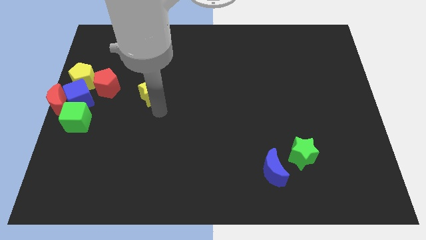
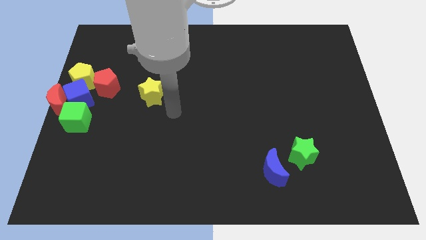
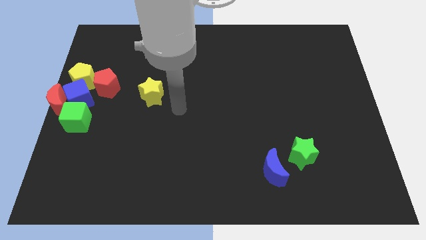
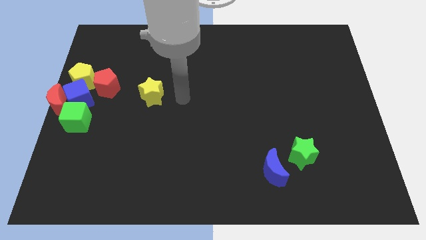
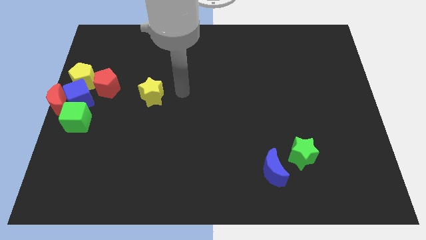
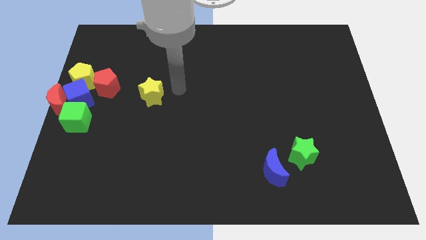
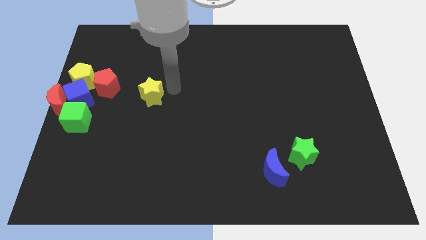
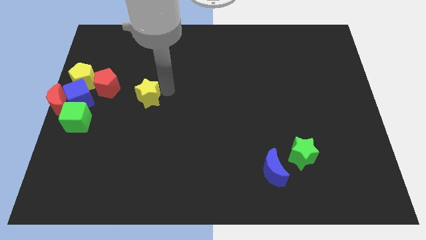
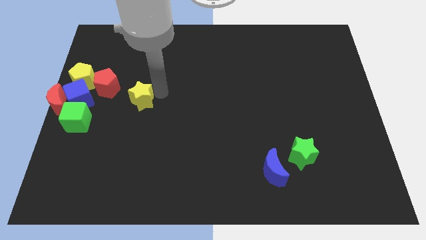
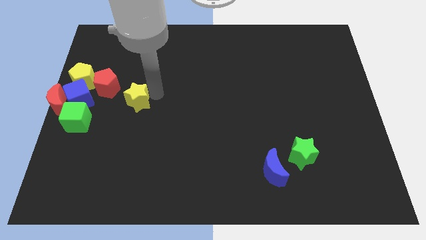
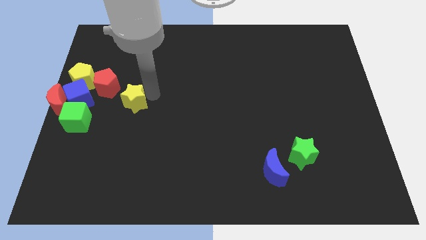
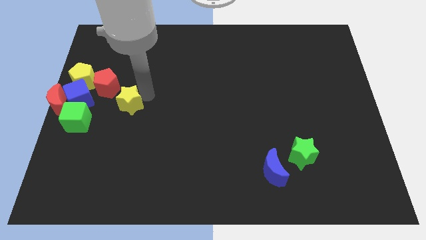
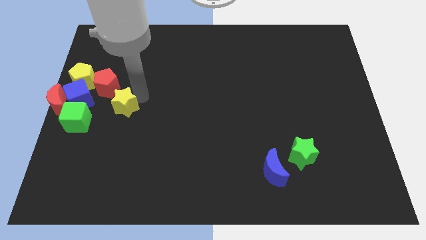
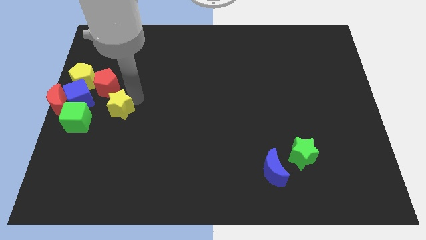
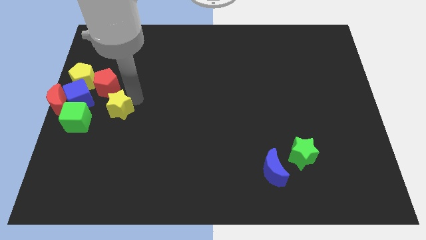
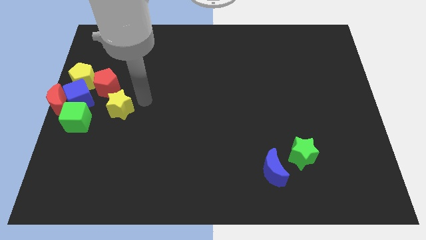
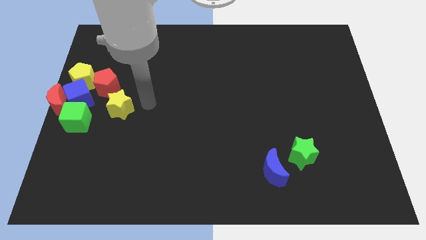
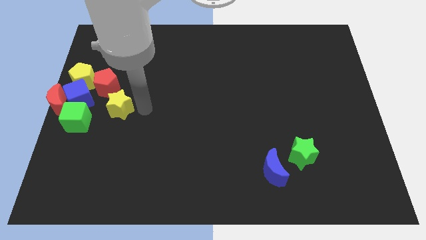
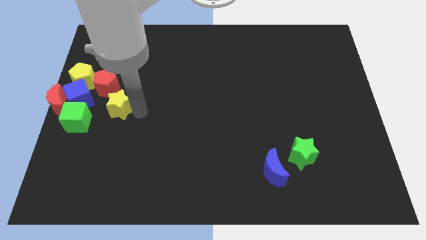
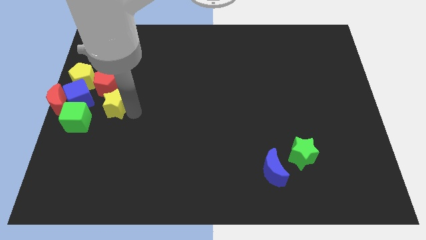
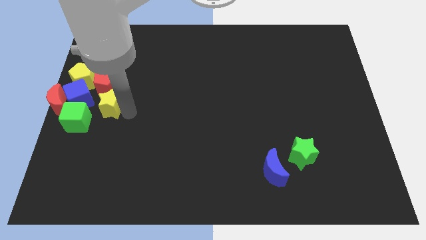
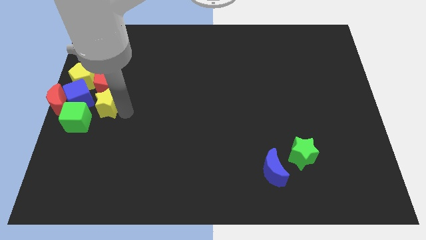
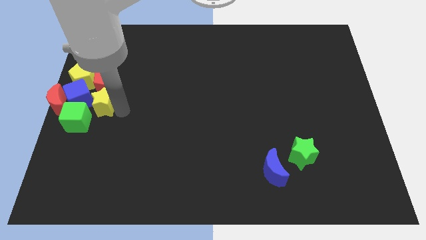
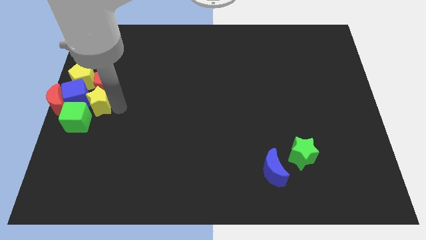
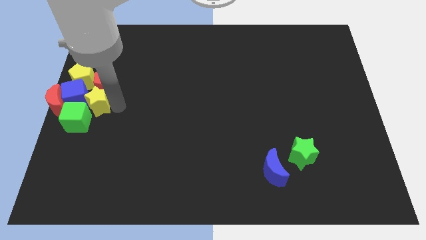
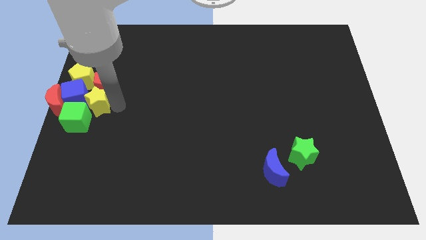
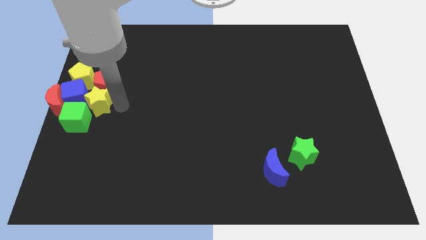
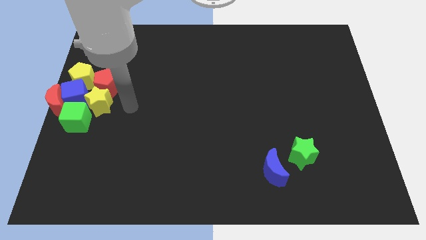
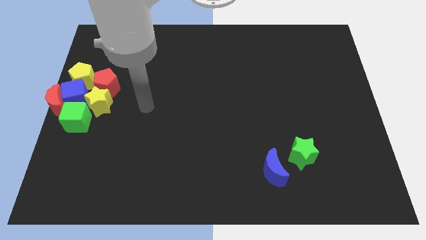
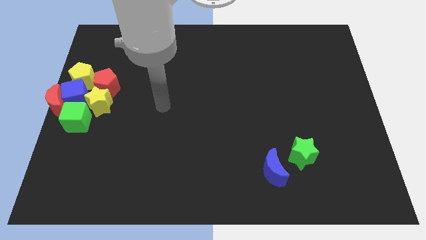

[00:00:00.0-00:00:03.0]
push the yellow star towards the blue cube

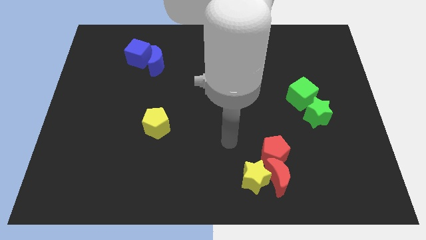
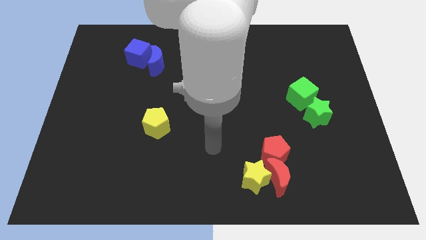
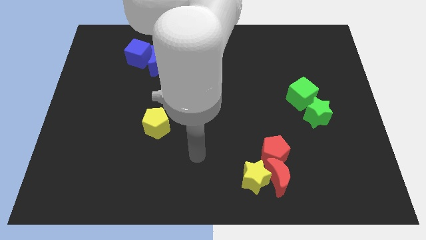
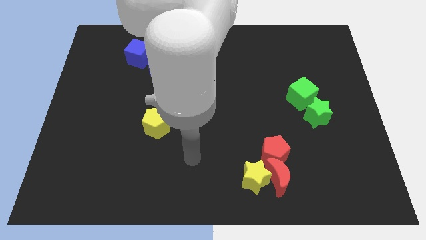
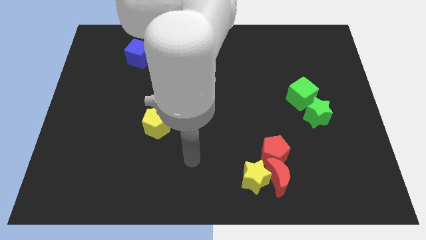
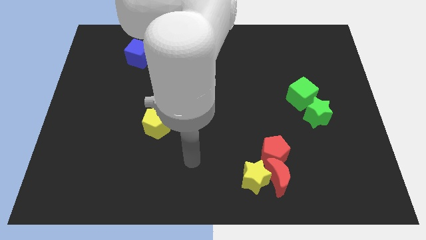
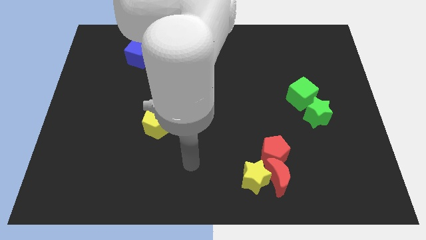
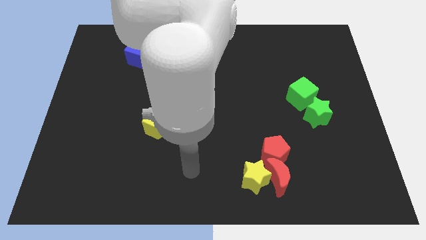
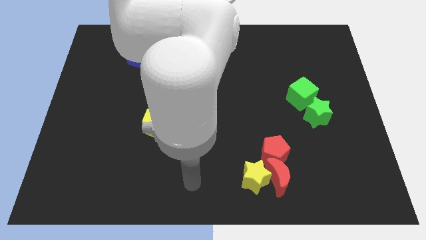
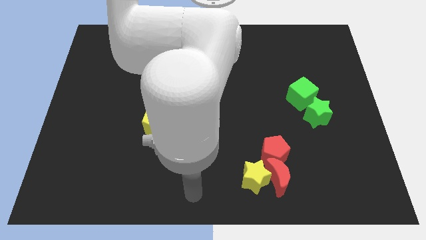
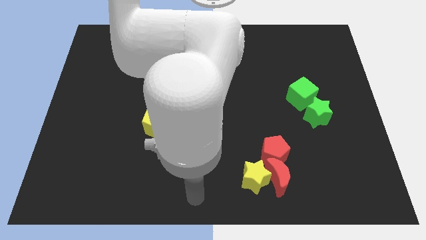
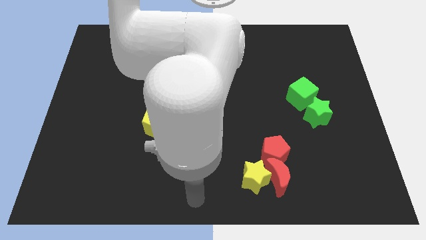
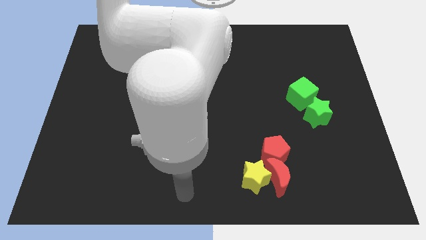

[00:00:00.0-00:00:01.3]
move arm at bottom center

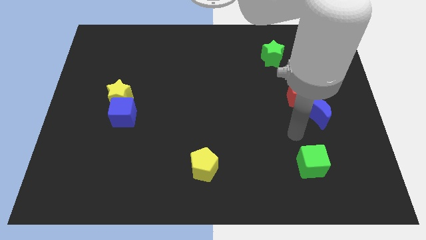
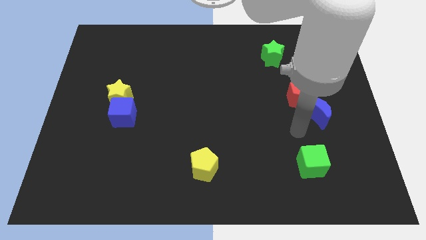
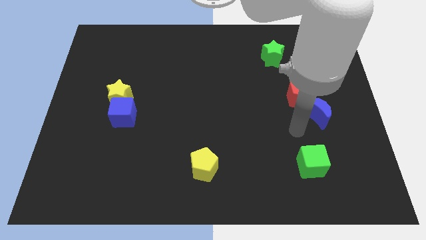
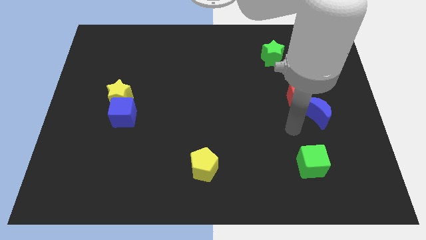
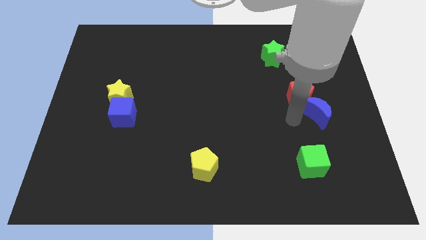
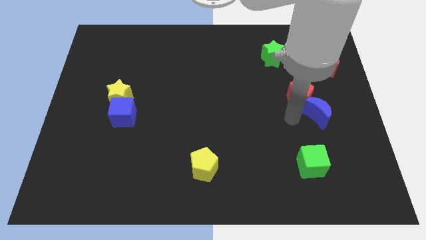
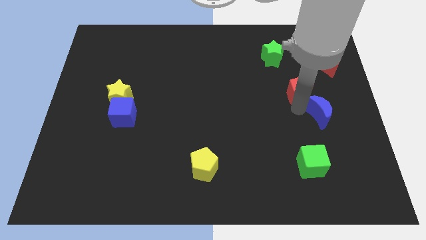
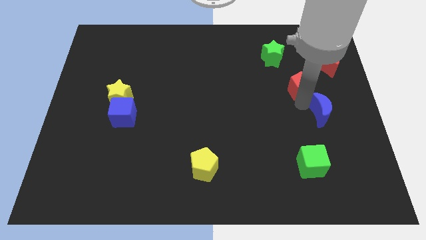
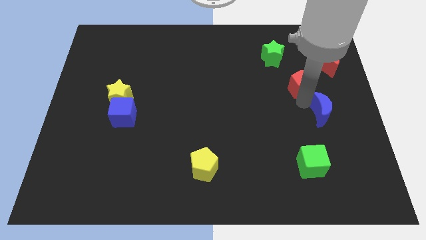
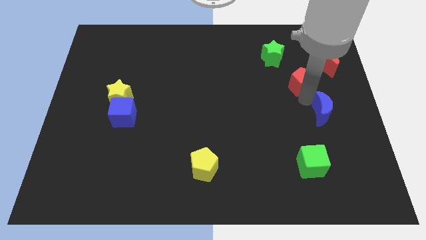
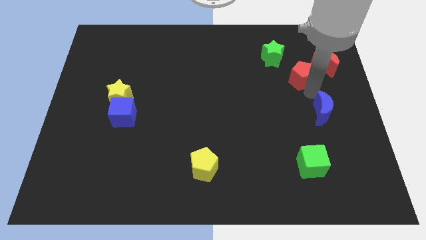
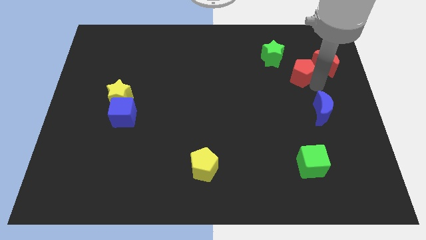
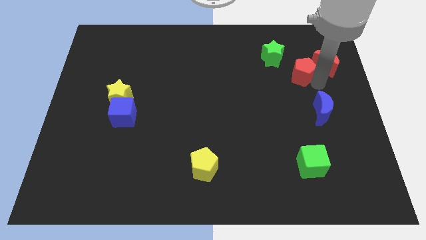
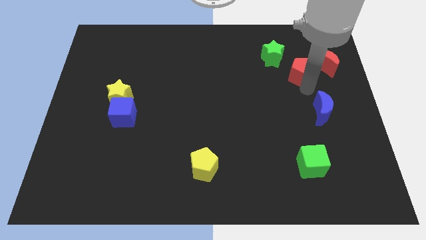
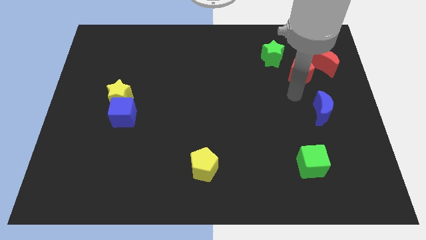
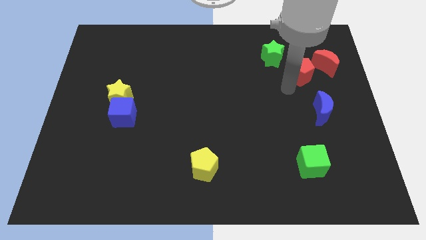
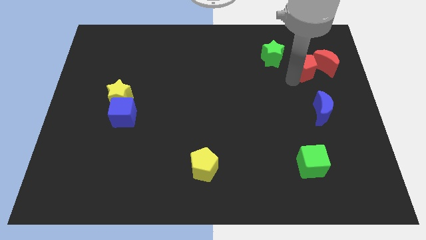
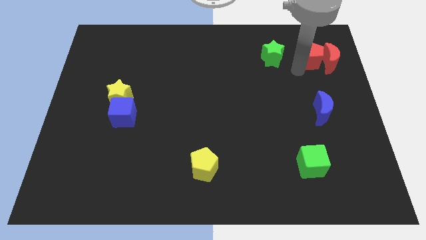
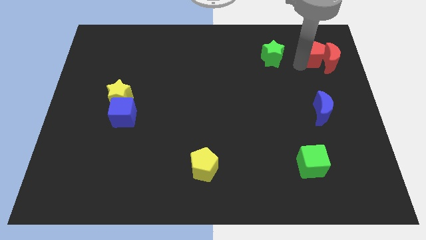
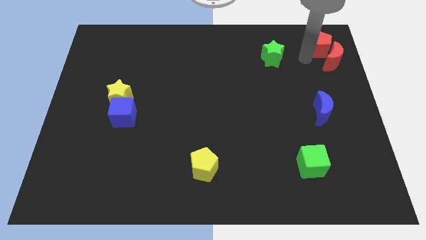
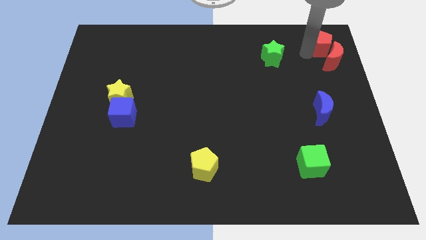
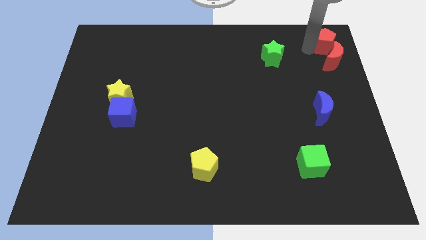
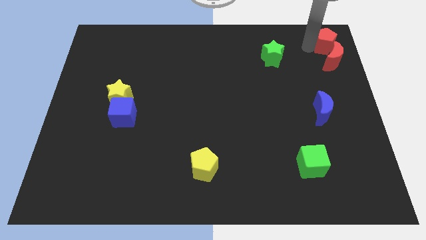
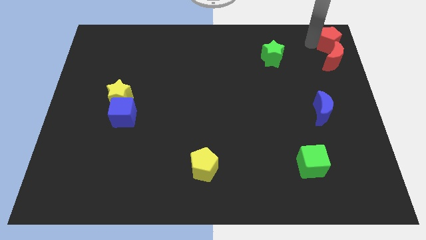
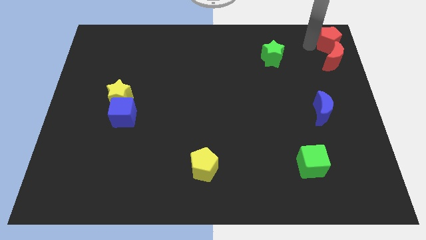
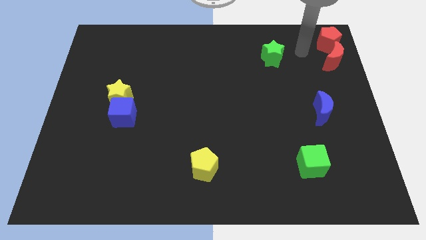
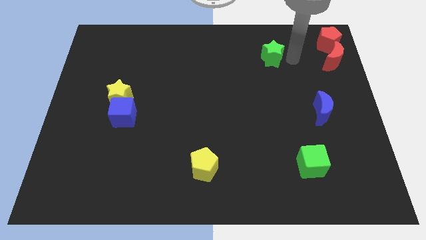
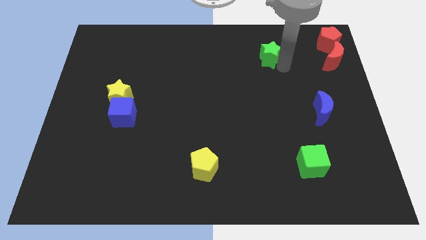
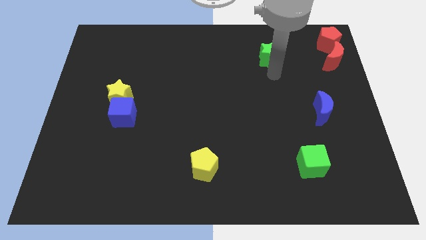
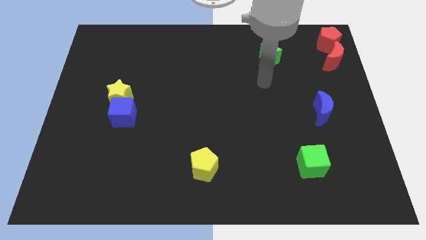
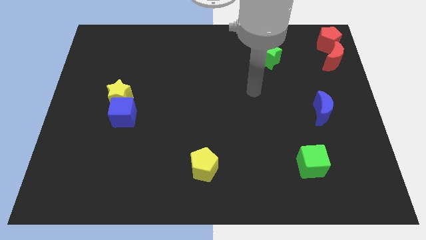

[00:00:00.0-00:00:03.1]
push the two red blocks to the top right corner of the board

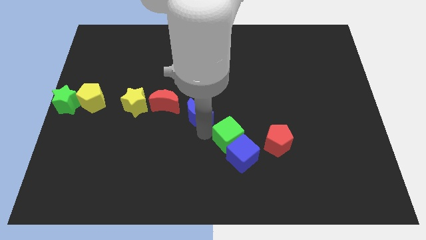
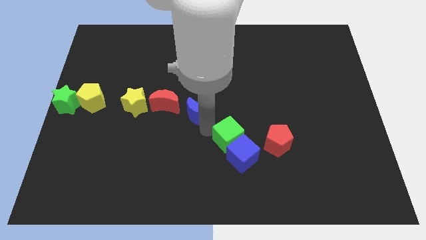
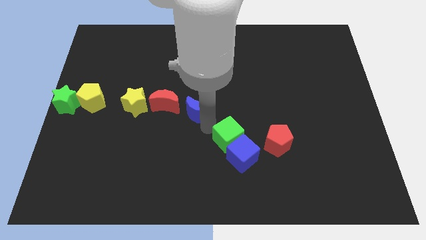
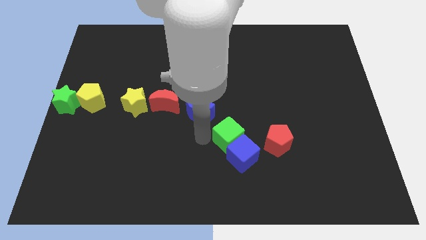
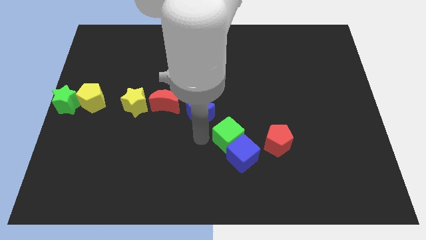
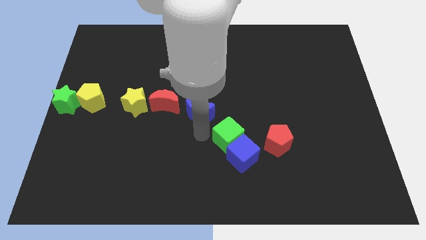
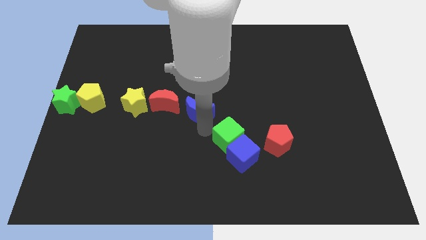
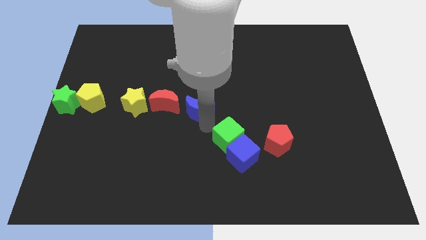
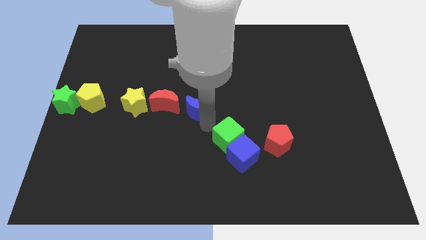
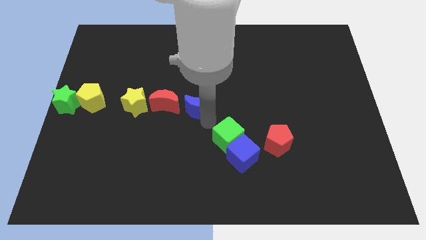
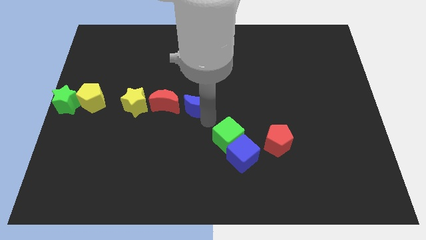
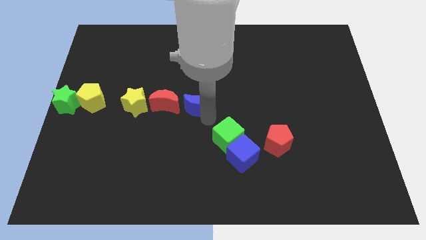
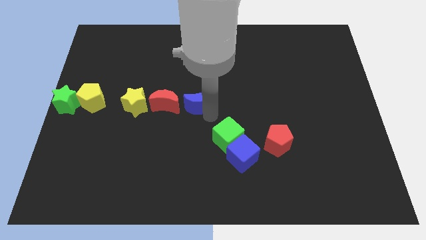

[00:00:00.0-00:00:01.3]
move blue crescent slightly to the top of the board

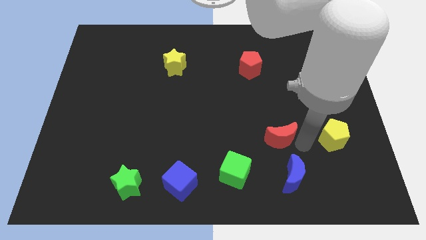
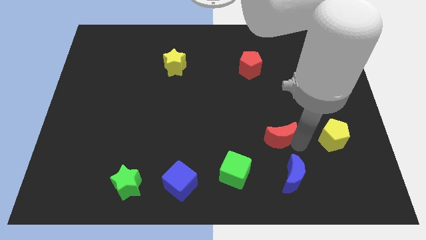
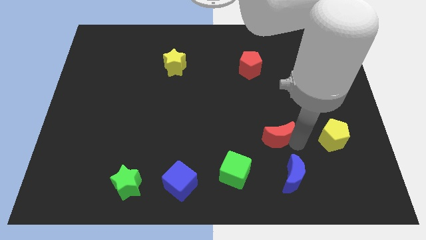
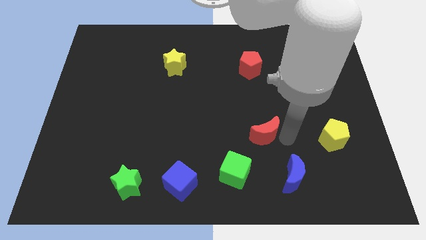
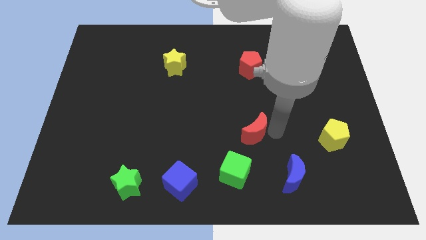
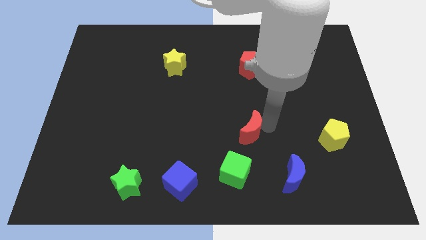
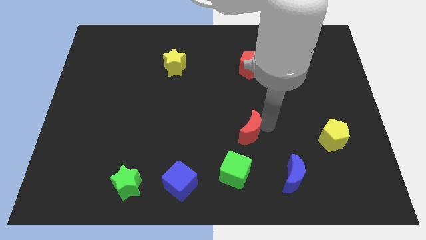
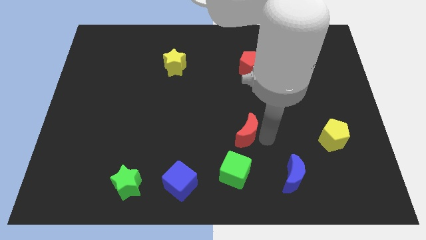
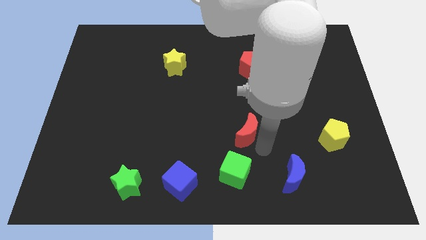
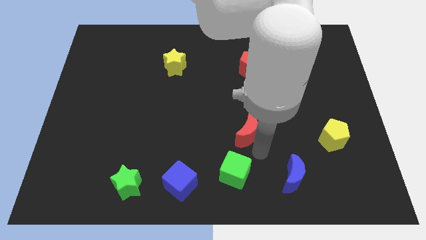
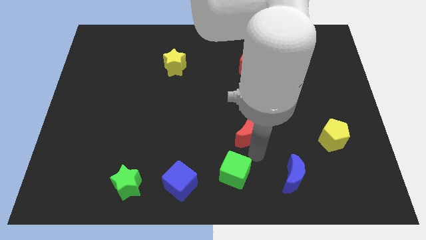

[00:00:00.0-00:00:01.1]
move the red crescent towards the top of the green cube
